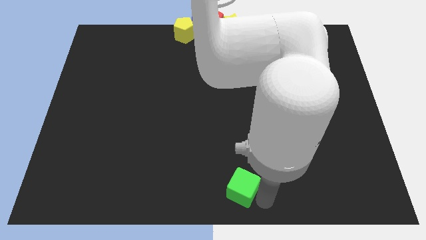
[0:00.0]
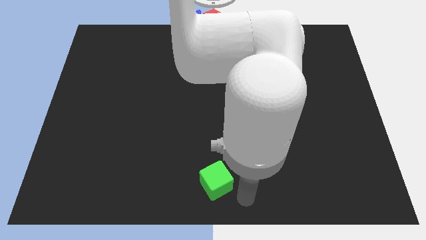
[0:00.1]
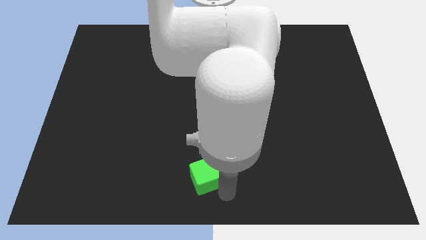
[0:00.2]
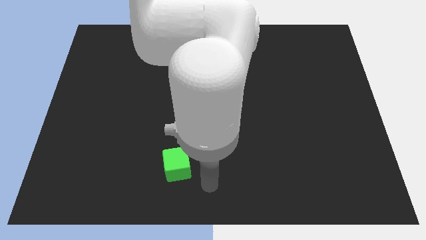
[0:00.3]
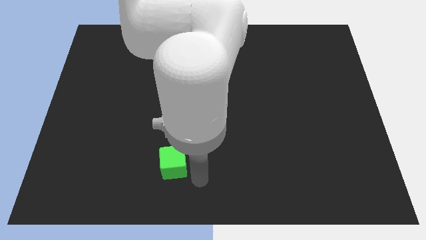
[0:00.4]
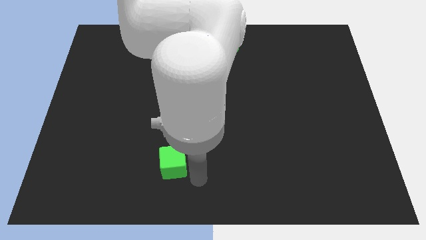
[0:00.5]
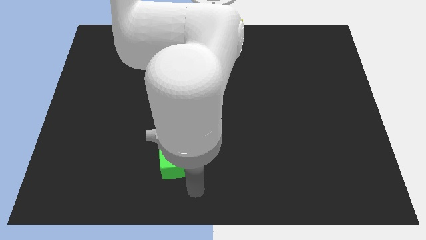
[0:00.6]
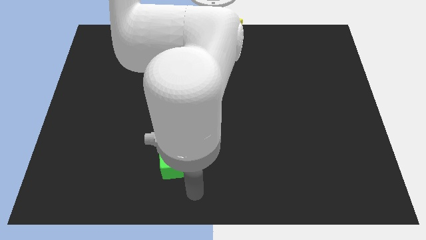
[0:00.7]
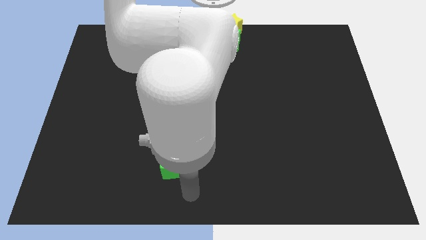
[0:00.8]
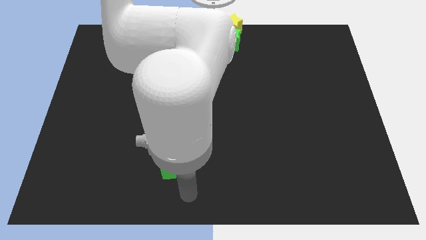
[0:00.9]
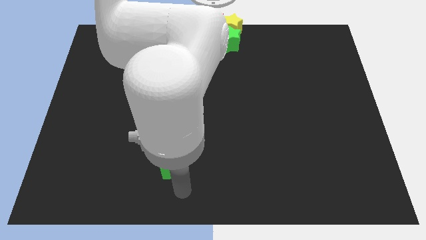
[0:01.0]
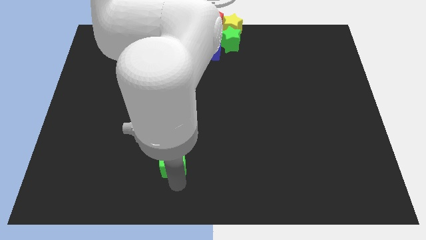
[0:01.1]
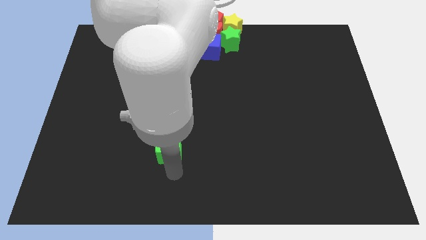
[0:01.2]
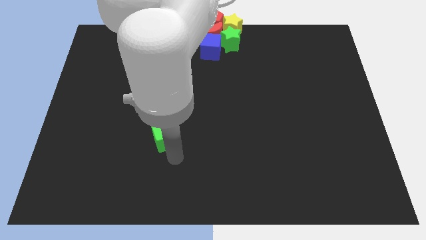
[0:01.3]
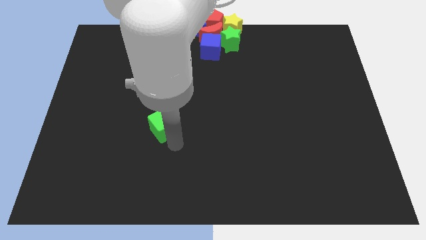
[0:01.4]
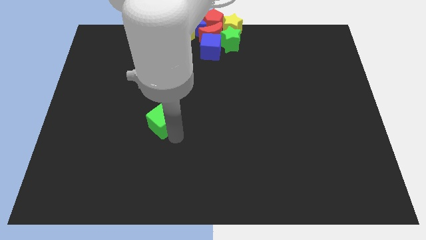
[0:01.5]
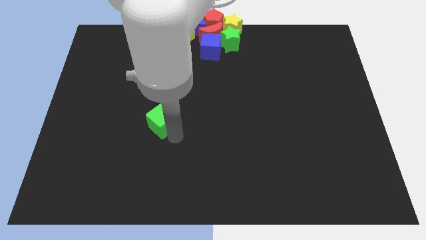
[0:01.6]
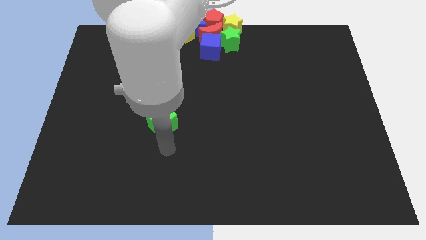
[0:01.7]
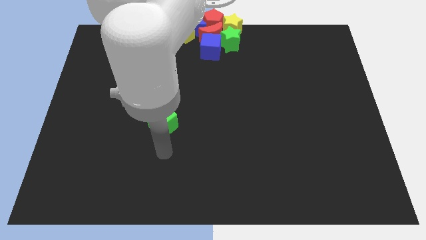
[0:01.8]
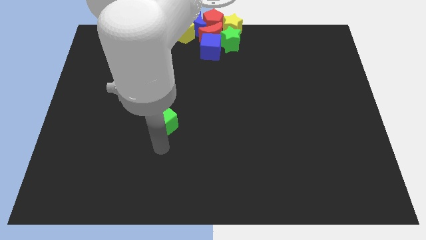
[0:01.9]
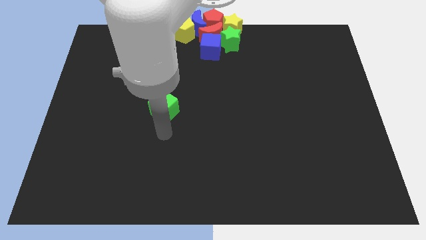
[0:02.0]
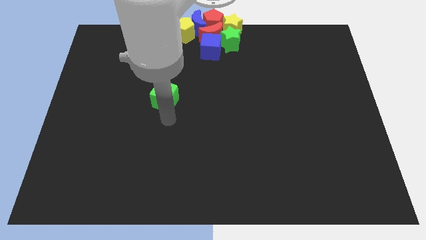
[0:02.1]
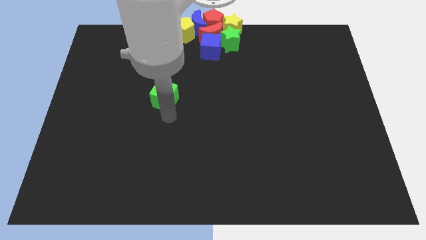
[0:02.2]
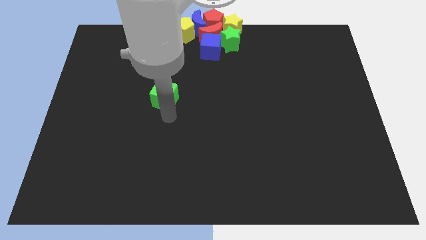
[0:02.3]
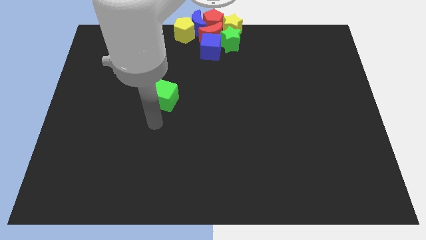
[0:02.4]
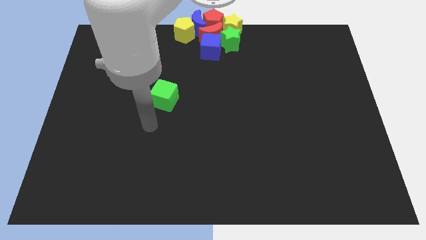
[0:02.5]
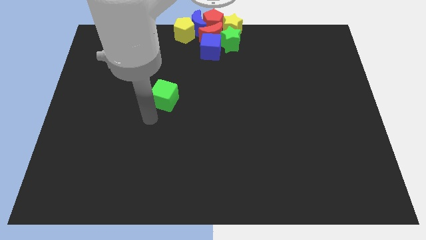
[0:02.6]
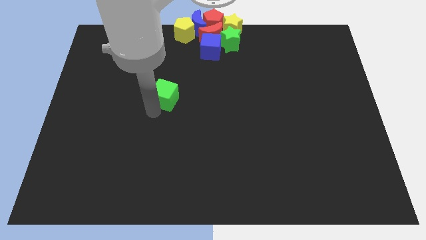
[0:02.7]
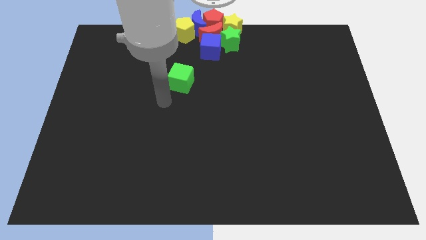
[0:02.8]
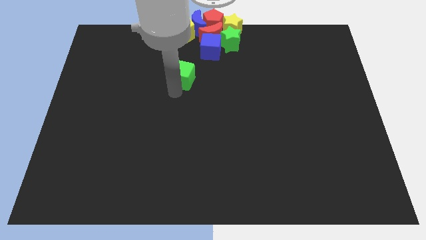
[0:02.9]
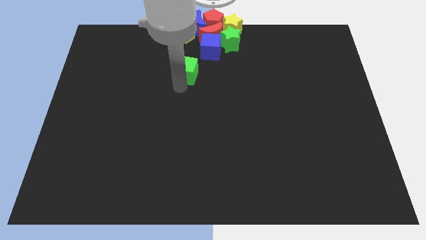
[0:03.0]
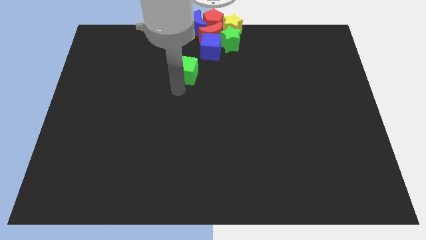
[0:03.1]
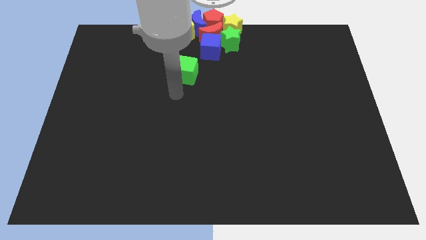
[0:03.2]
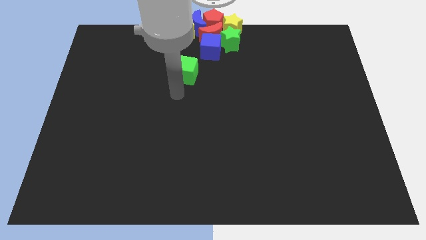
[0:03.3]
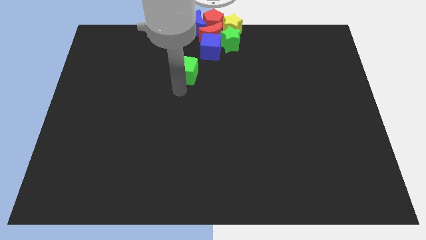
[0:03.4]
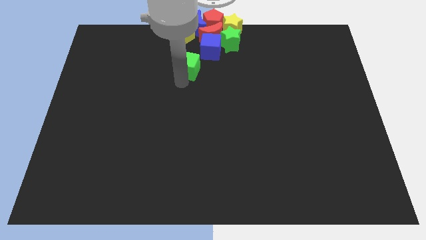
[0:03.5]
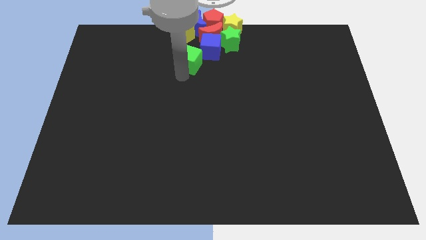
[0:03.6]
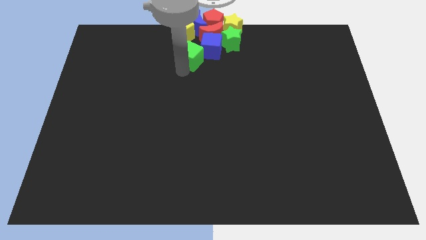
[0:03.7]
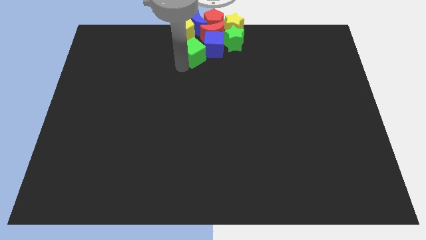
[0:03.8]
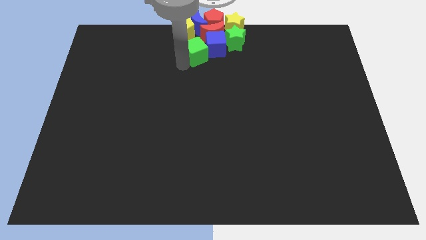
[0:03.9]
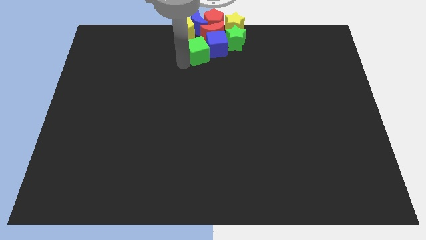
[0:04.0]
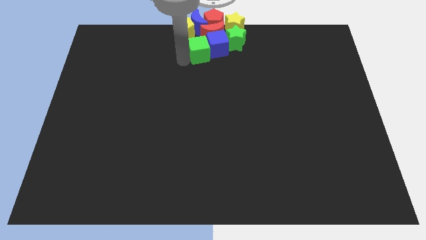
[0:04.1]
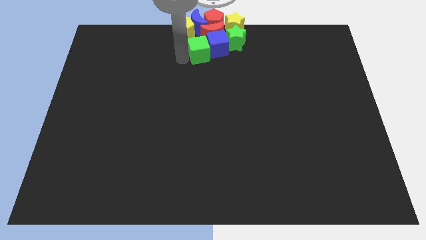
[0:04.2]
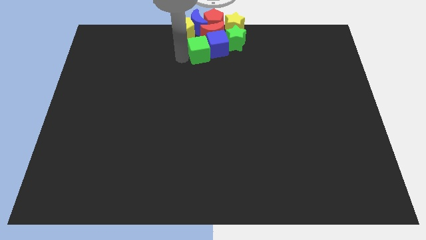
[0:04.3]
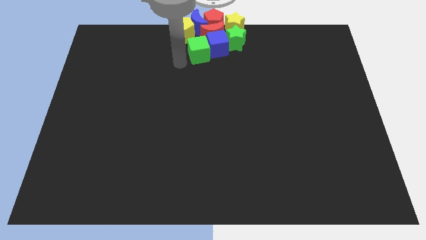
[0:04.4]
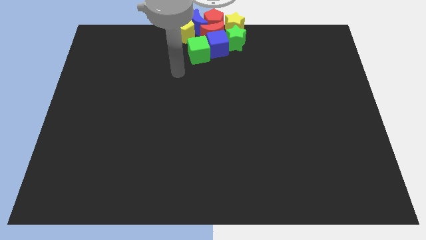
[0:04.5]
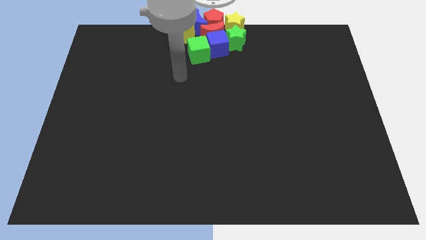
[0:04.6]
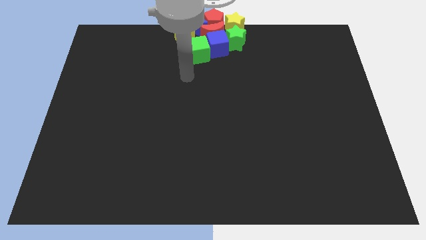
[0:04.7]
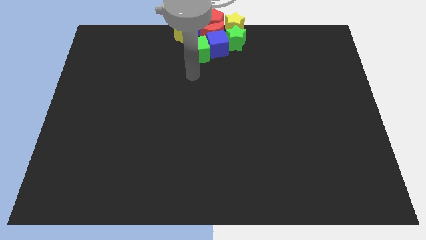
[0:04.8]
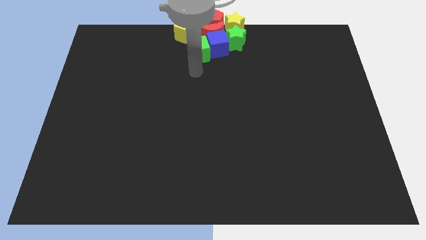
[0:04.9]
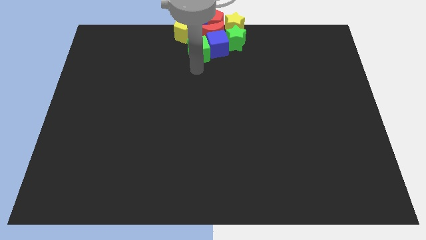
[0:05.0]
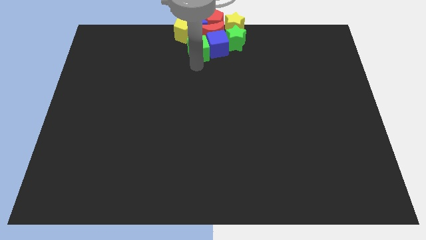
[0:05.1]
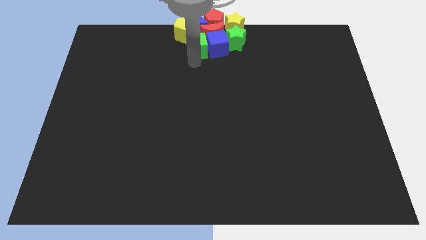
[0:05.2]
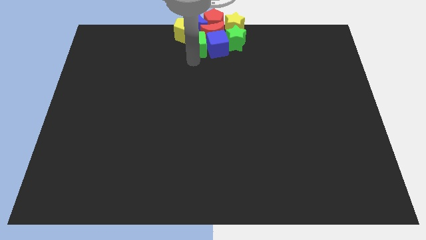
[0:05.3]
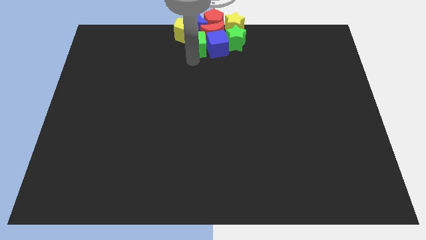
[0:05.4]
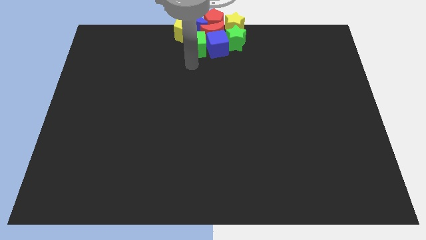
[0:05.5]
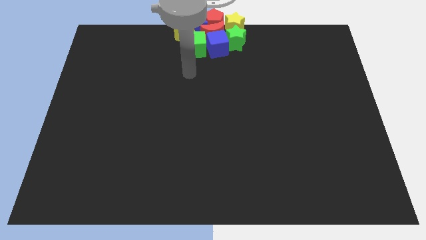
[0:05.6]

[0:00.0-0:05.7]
move green cube to the left of blue cube

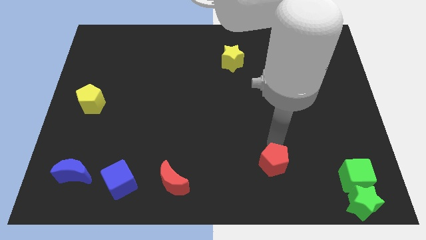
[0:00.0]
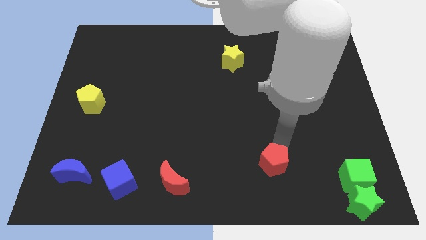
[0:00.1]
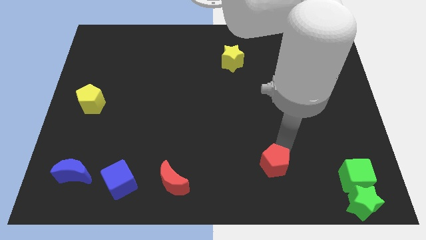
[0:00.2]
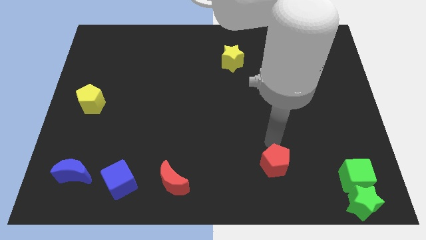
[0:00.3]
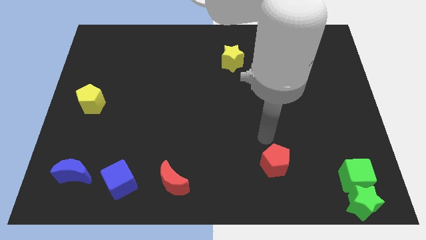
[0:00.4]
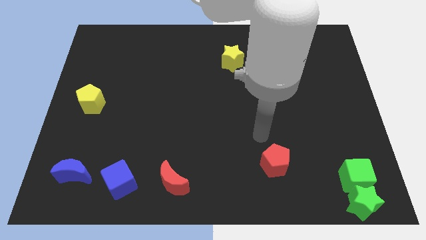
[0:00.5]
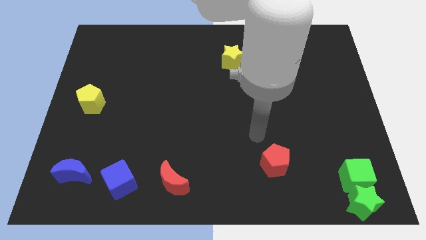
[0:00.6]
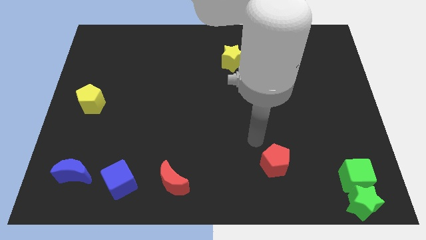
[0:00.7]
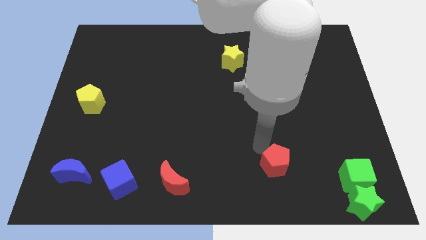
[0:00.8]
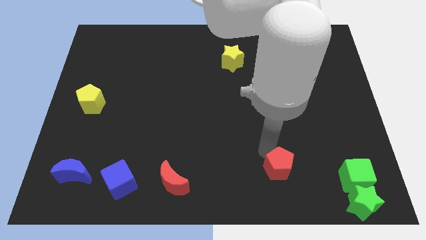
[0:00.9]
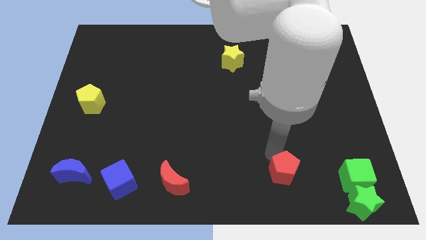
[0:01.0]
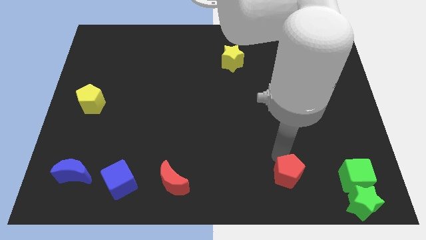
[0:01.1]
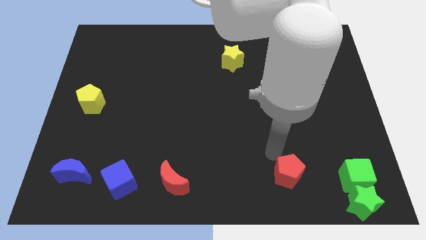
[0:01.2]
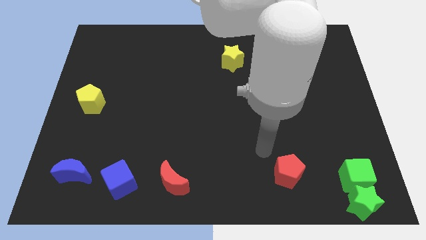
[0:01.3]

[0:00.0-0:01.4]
place the red pentagon to the left of the green cube

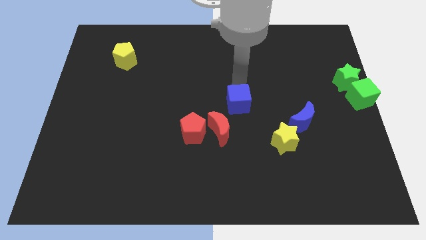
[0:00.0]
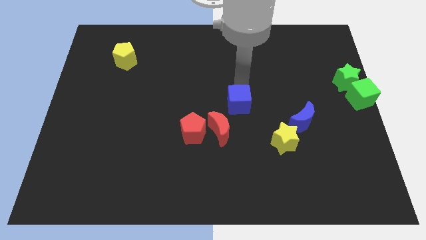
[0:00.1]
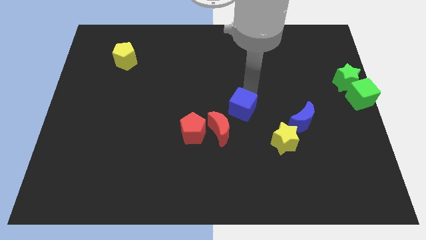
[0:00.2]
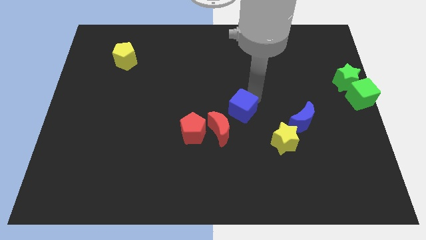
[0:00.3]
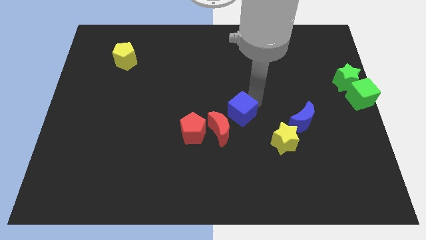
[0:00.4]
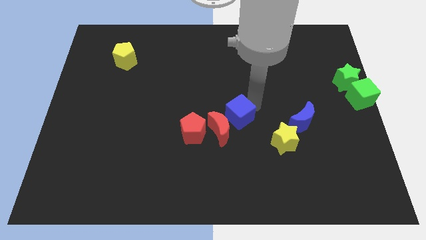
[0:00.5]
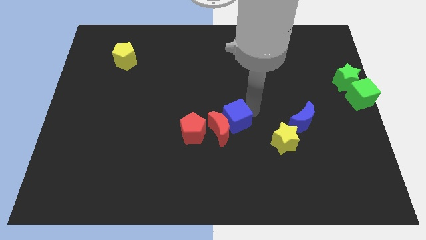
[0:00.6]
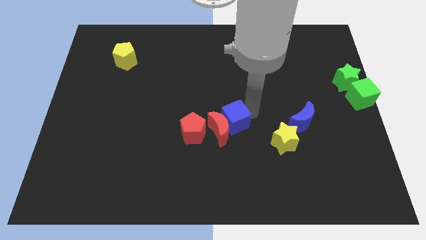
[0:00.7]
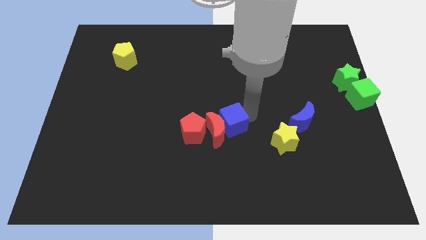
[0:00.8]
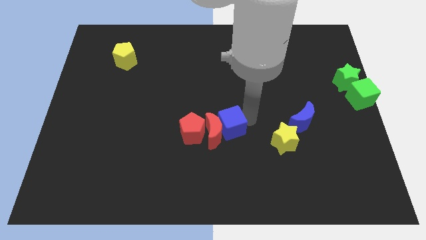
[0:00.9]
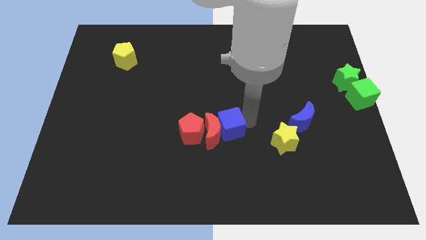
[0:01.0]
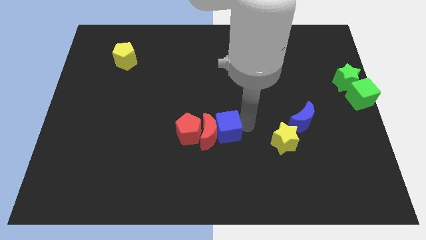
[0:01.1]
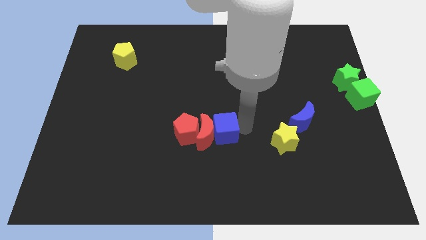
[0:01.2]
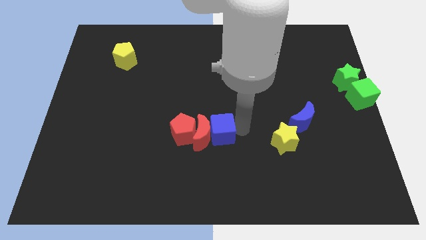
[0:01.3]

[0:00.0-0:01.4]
place blue block to the right of red crescent

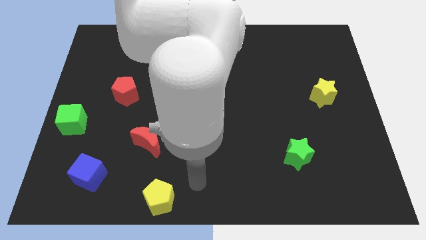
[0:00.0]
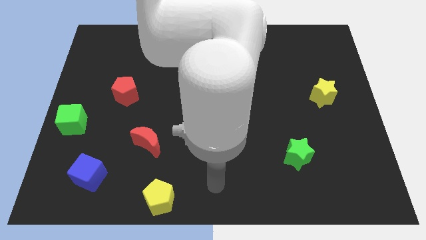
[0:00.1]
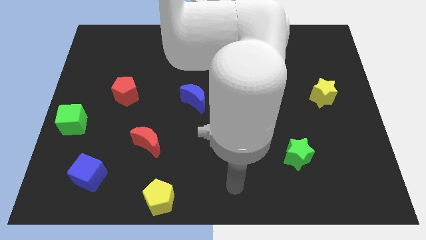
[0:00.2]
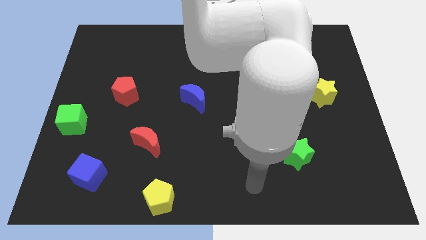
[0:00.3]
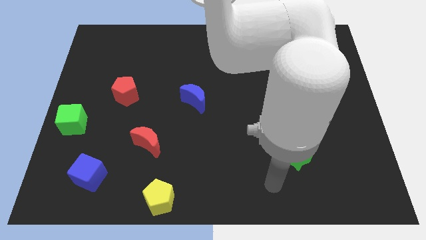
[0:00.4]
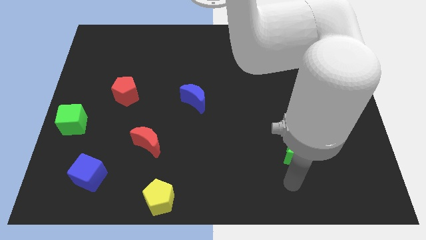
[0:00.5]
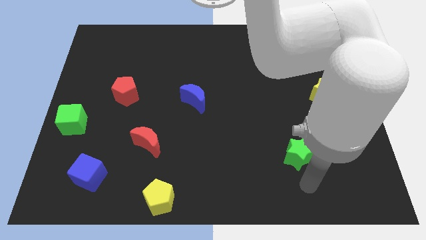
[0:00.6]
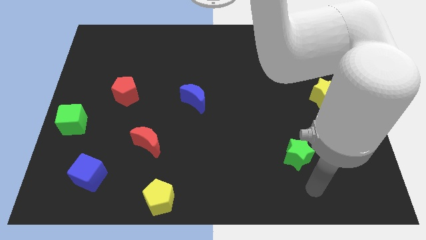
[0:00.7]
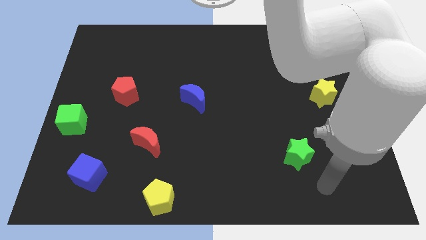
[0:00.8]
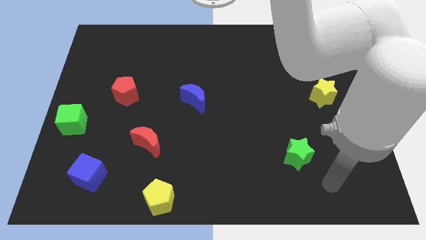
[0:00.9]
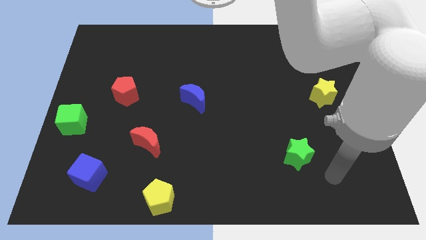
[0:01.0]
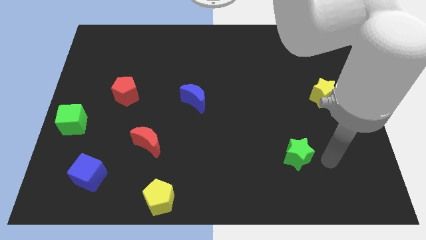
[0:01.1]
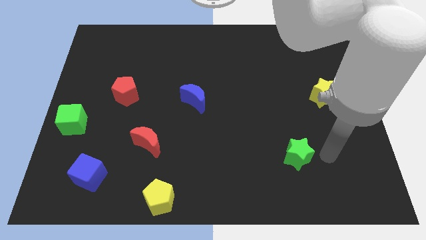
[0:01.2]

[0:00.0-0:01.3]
move arm towards the right to the green star on the board
